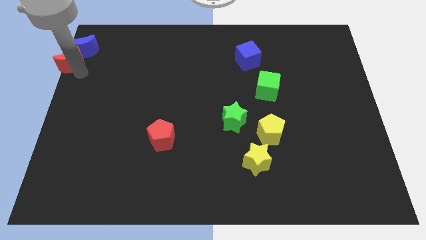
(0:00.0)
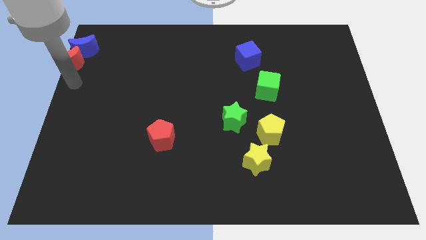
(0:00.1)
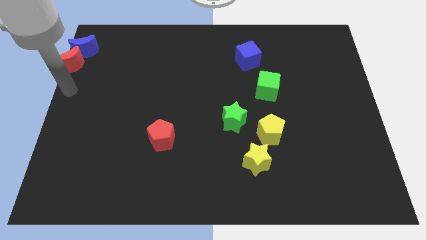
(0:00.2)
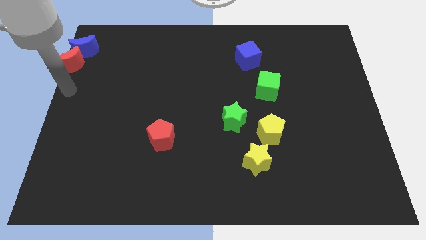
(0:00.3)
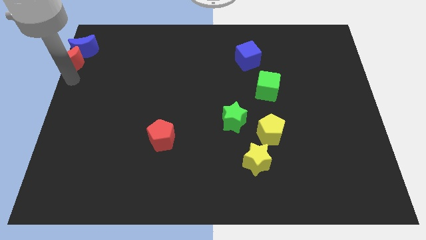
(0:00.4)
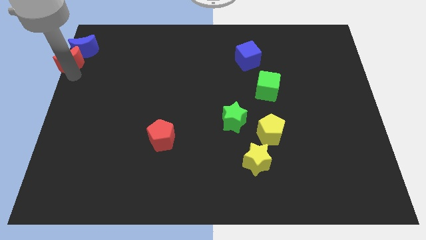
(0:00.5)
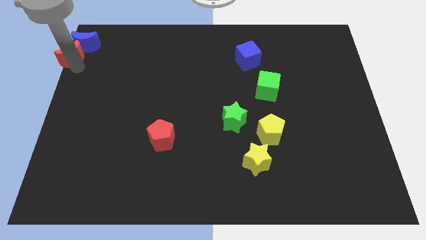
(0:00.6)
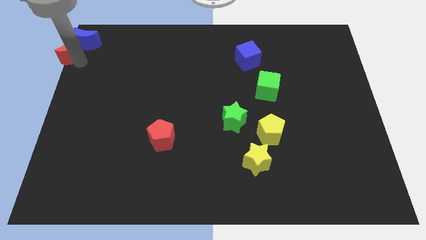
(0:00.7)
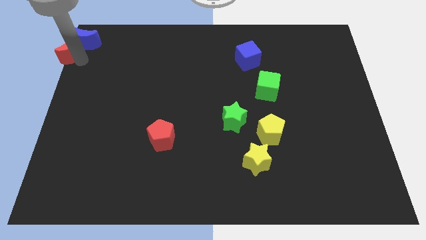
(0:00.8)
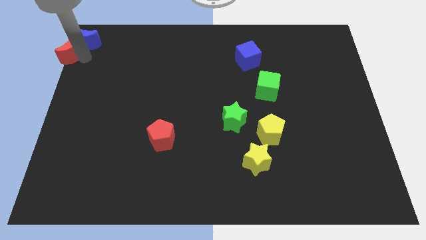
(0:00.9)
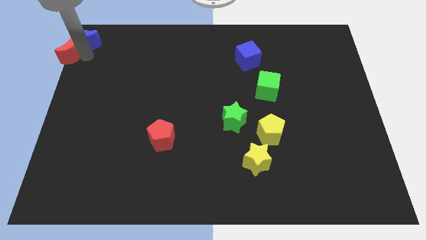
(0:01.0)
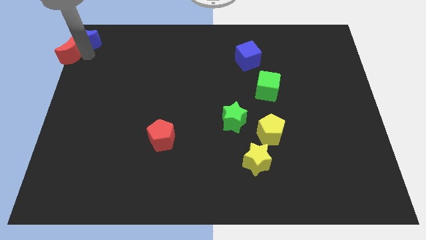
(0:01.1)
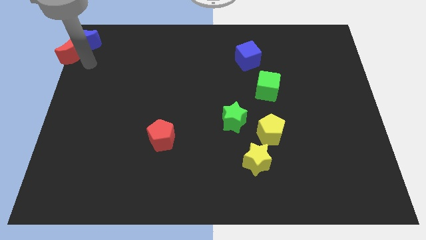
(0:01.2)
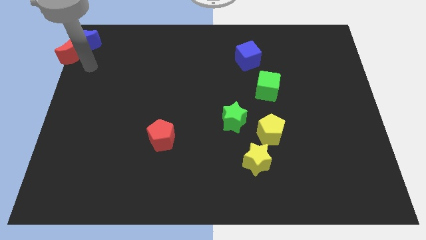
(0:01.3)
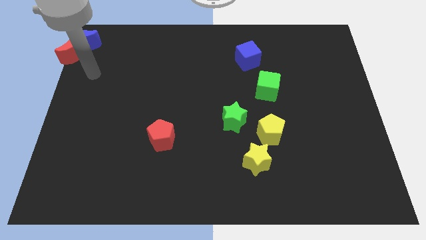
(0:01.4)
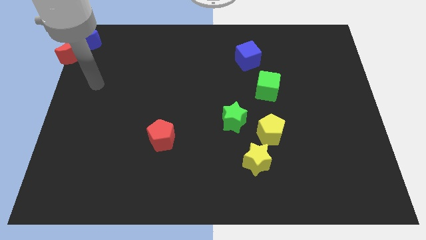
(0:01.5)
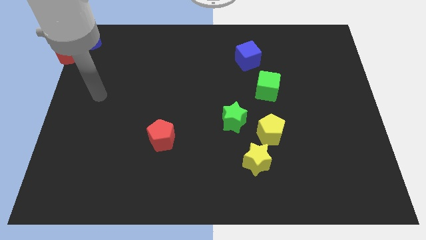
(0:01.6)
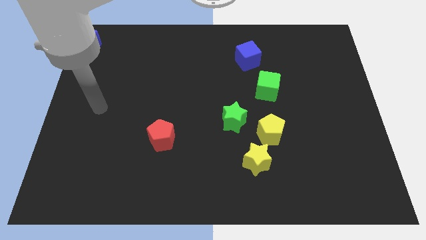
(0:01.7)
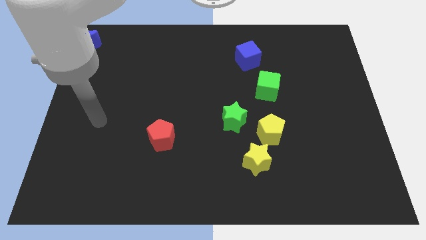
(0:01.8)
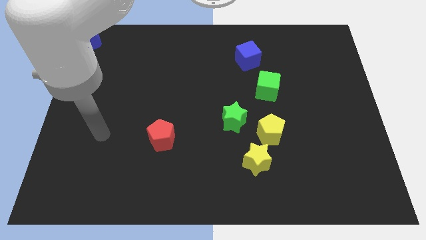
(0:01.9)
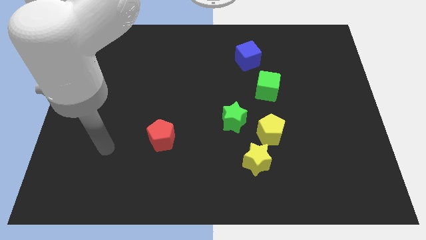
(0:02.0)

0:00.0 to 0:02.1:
move red and blue crescent towards the top left corner of the board

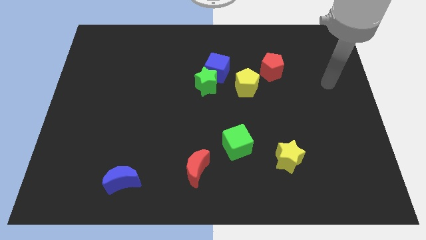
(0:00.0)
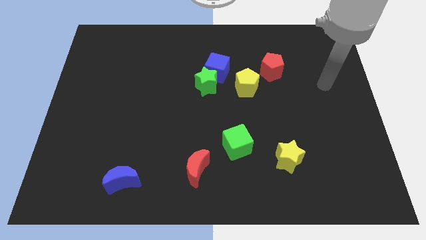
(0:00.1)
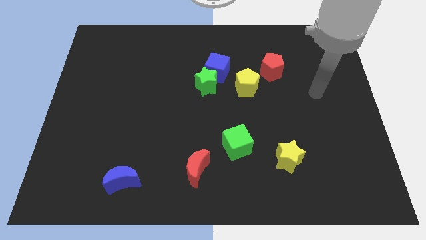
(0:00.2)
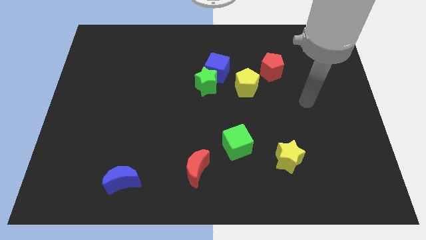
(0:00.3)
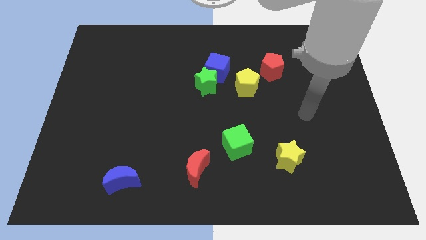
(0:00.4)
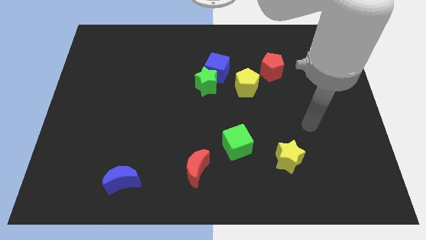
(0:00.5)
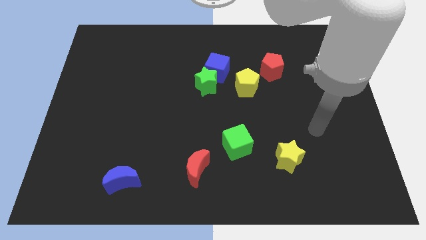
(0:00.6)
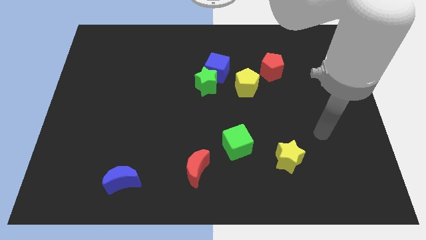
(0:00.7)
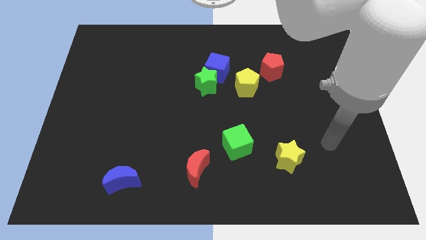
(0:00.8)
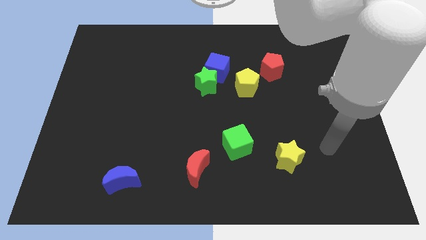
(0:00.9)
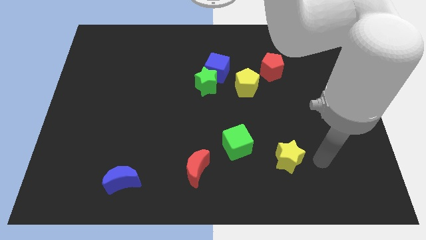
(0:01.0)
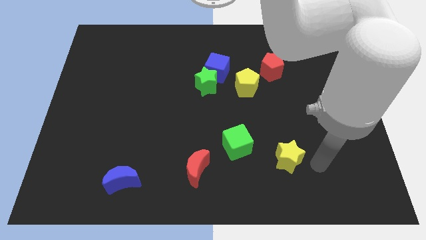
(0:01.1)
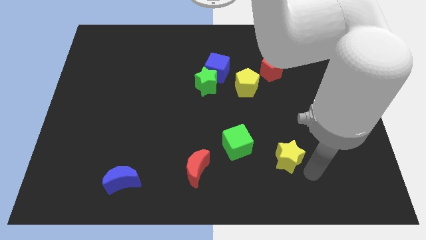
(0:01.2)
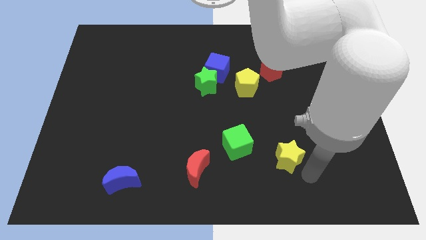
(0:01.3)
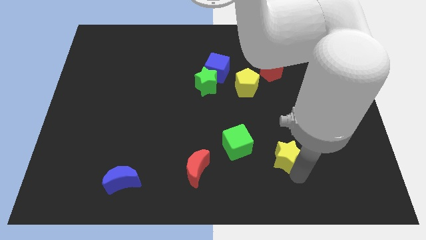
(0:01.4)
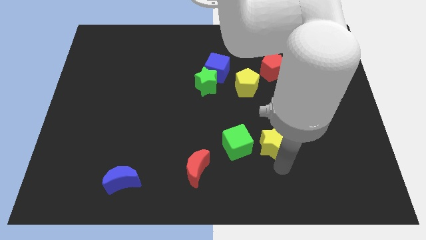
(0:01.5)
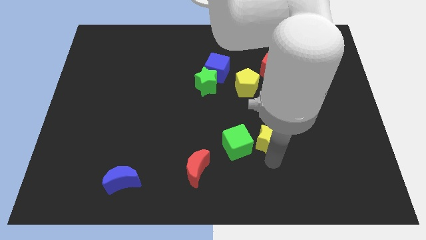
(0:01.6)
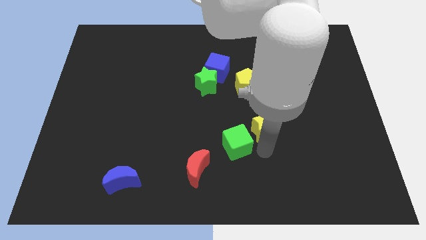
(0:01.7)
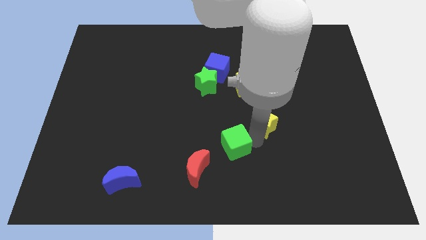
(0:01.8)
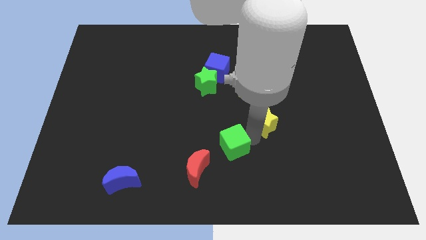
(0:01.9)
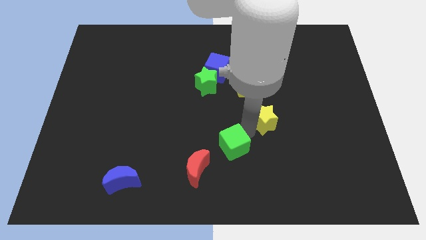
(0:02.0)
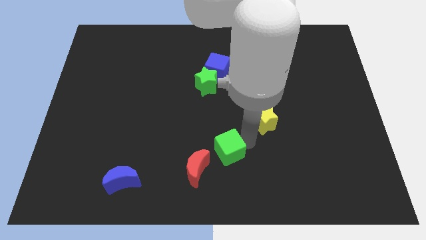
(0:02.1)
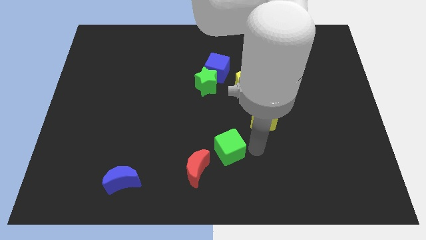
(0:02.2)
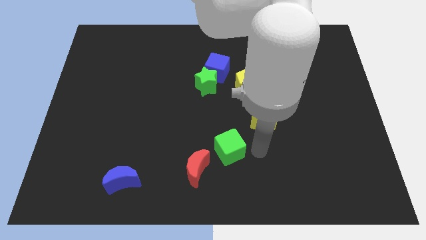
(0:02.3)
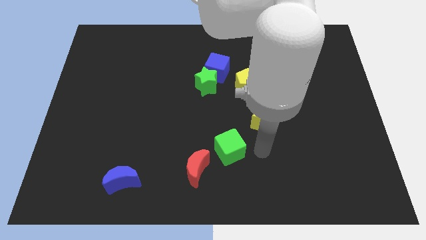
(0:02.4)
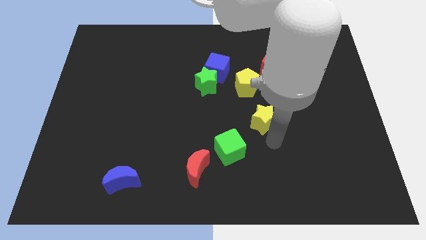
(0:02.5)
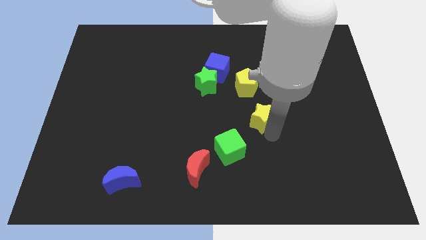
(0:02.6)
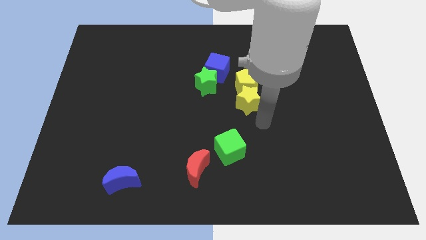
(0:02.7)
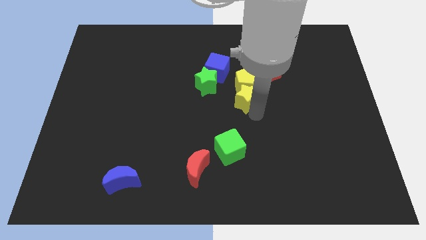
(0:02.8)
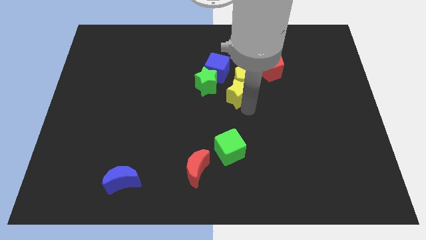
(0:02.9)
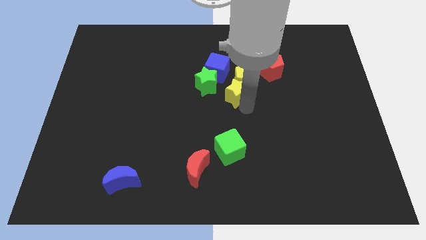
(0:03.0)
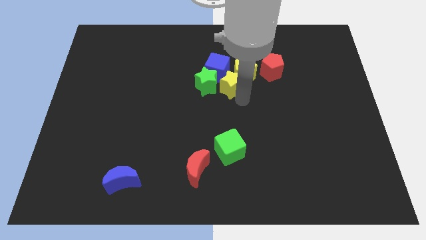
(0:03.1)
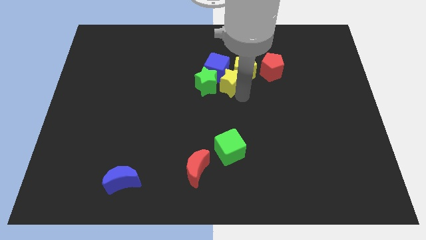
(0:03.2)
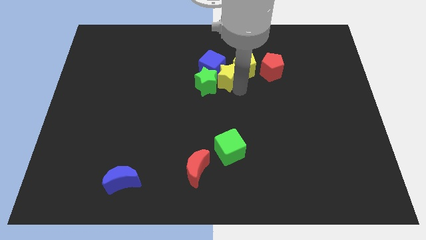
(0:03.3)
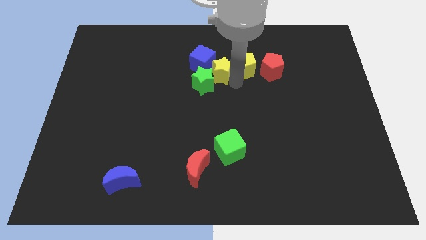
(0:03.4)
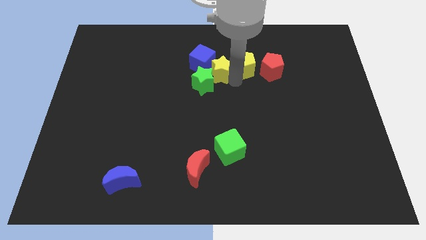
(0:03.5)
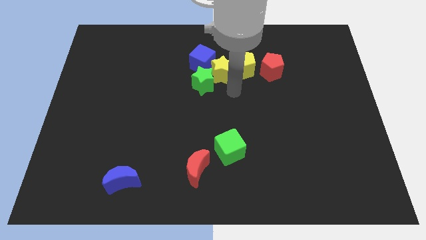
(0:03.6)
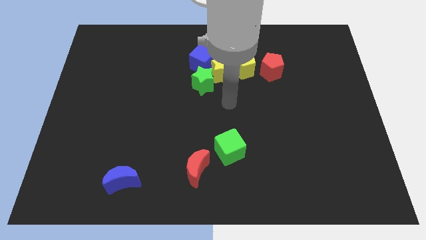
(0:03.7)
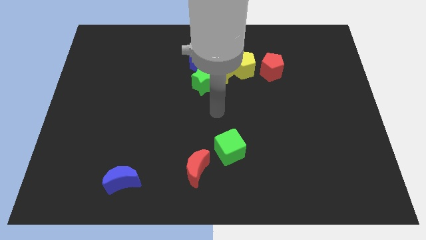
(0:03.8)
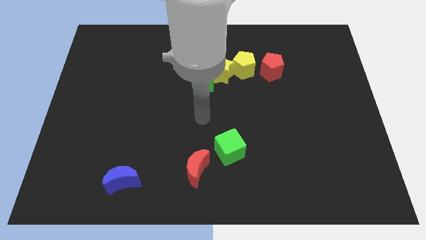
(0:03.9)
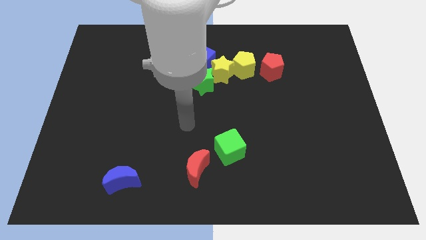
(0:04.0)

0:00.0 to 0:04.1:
slide the yellow star into the group of blocks

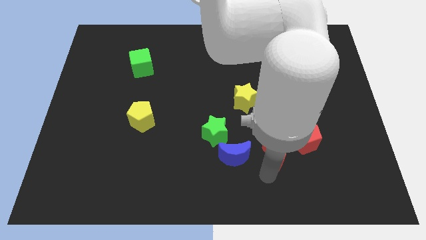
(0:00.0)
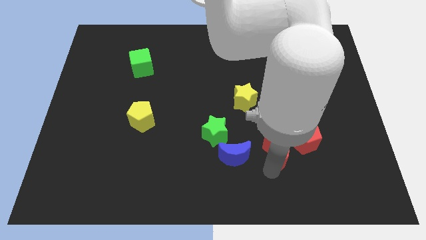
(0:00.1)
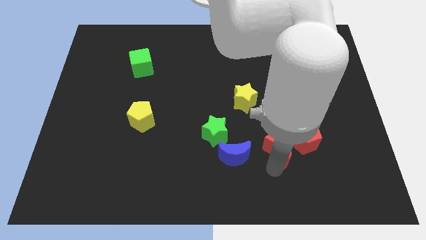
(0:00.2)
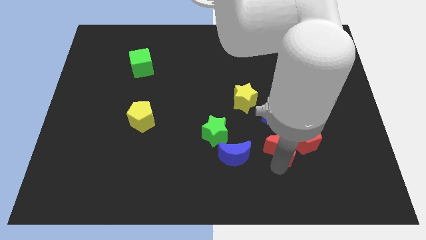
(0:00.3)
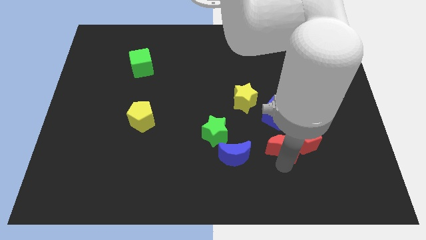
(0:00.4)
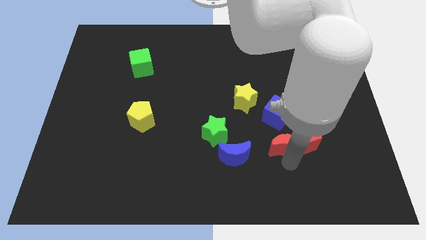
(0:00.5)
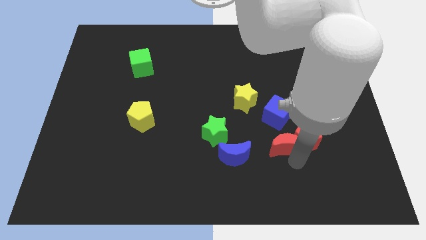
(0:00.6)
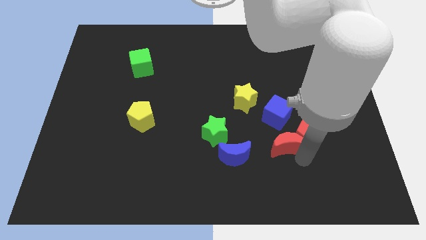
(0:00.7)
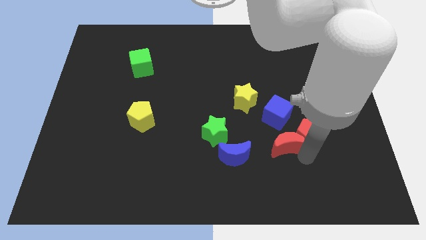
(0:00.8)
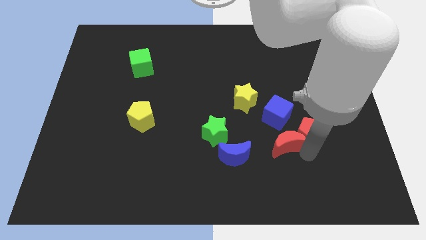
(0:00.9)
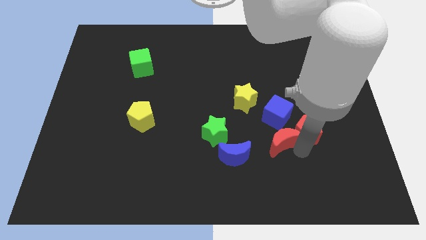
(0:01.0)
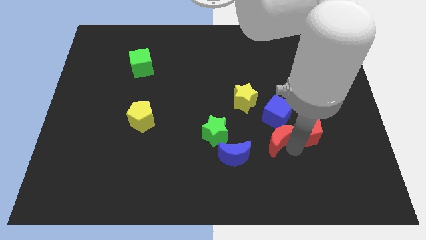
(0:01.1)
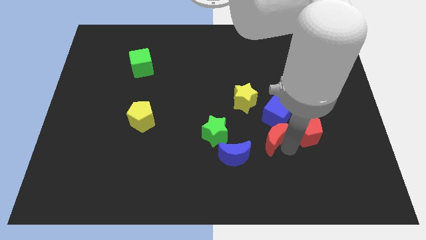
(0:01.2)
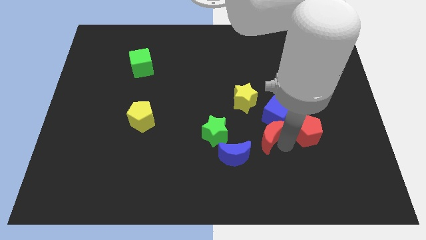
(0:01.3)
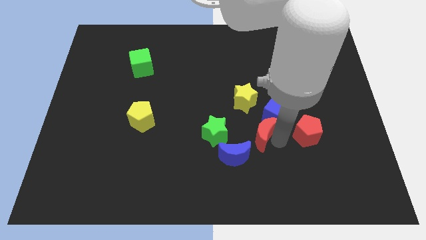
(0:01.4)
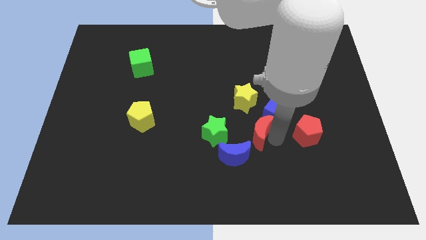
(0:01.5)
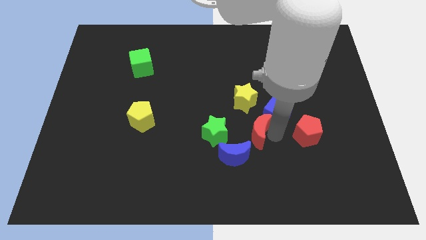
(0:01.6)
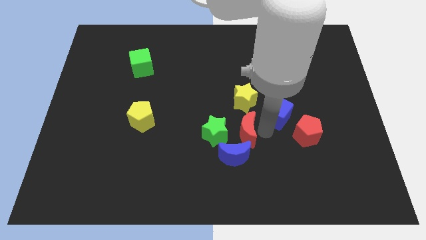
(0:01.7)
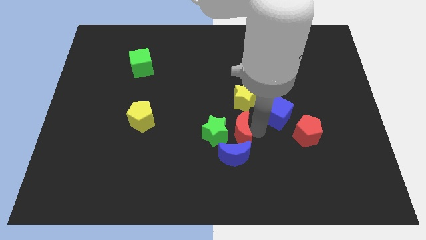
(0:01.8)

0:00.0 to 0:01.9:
slide the red crescent horizontal to the green star

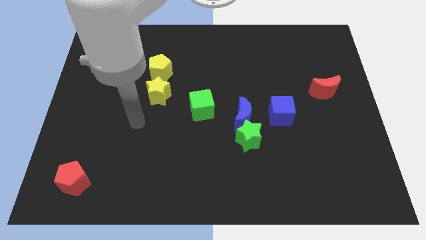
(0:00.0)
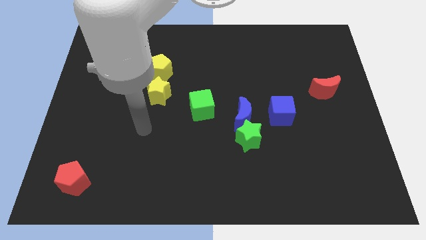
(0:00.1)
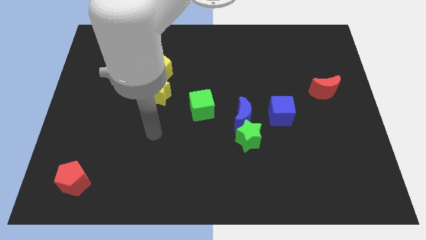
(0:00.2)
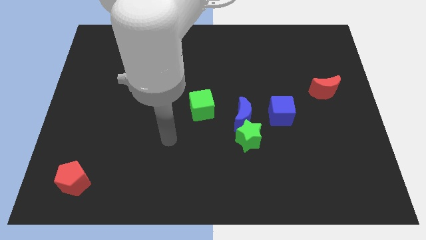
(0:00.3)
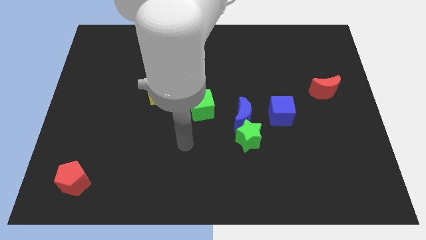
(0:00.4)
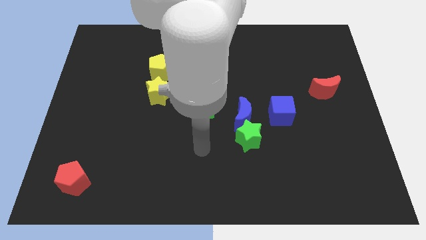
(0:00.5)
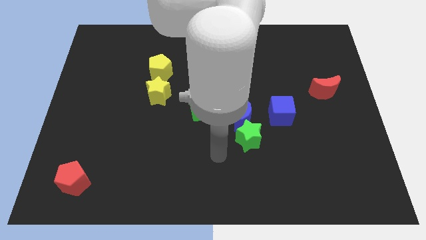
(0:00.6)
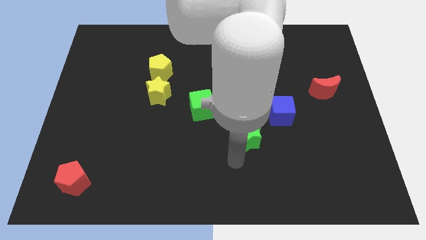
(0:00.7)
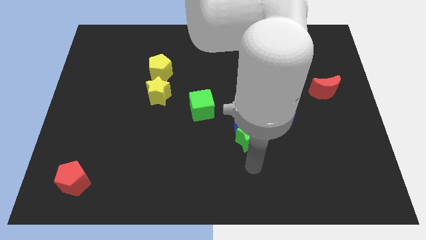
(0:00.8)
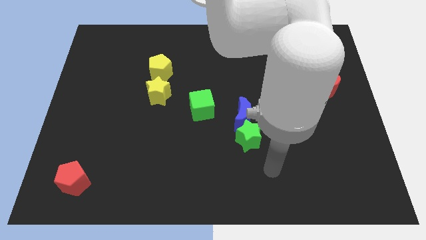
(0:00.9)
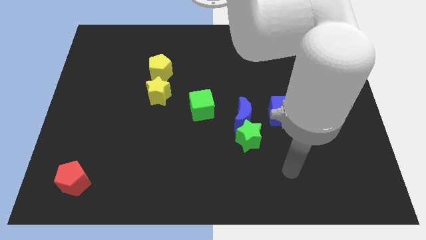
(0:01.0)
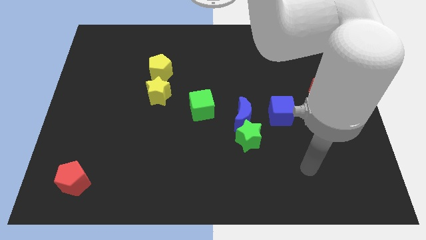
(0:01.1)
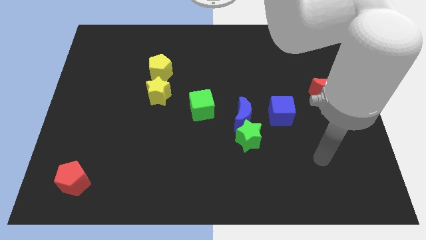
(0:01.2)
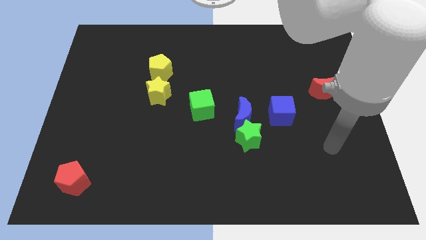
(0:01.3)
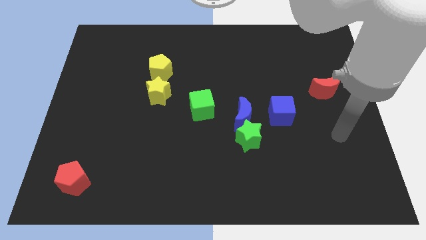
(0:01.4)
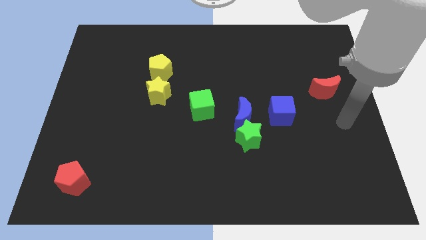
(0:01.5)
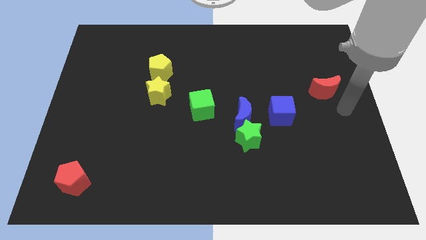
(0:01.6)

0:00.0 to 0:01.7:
move your arm to the right center of the board
